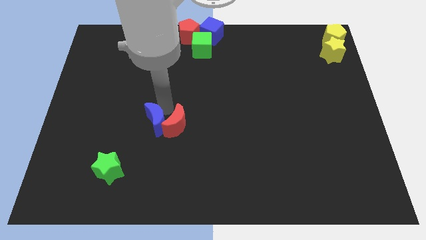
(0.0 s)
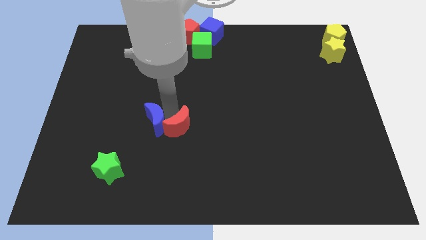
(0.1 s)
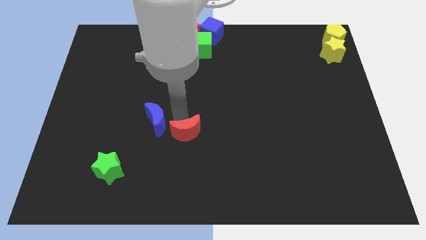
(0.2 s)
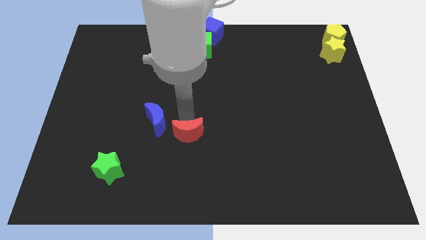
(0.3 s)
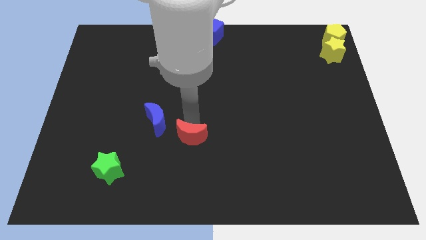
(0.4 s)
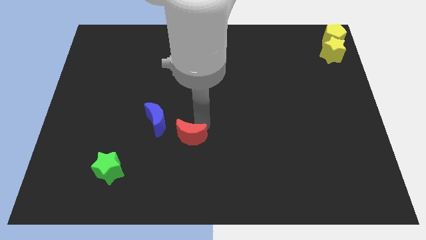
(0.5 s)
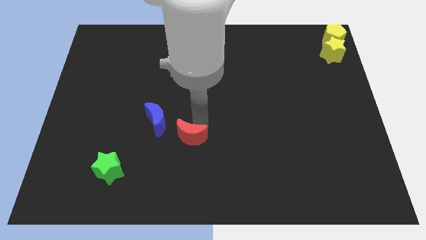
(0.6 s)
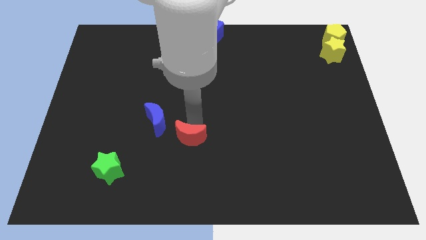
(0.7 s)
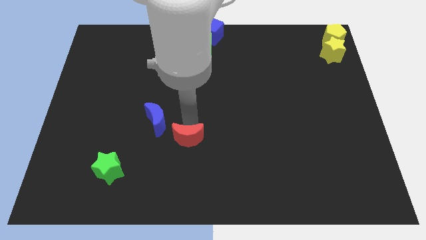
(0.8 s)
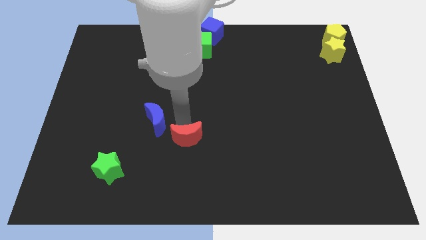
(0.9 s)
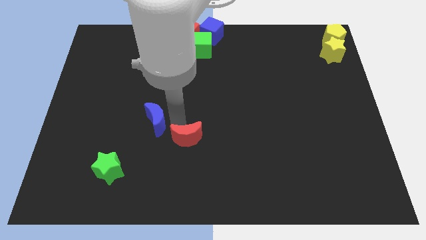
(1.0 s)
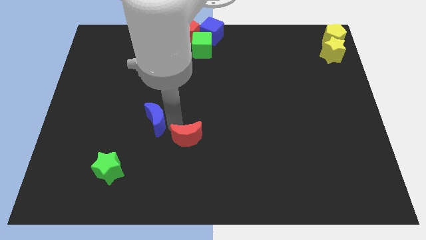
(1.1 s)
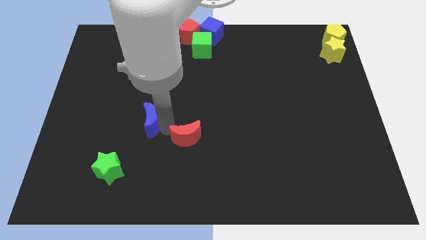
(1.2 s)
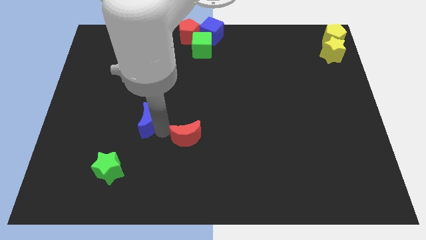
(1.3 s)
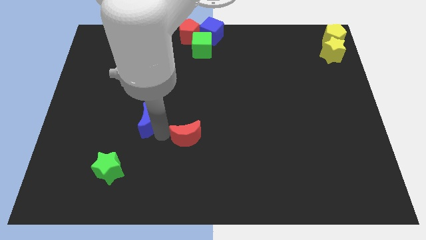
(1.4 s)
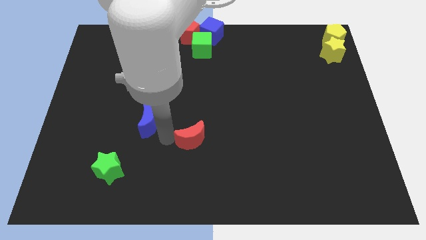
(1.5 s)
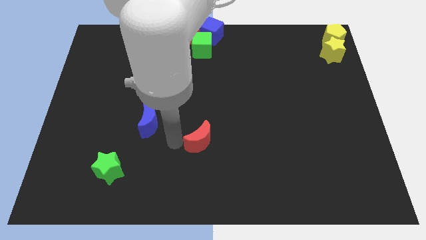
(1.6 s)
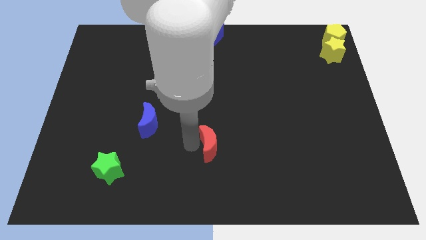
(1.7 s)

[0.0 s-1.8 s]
separate red moon from blue crescent

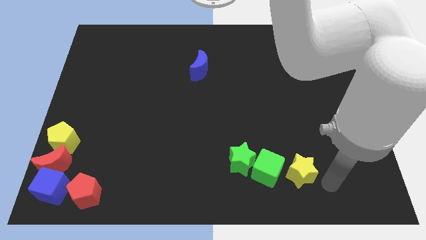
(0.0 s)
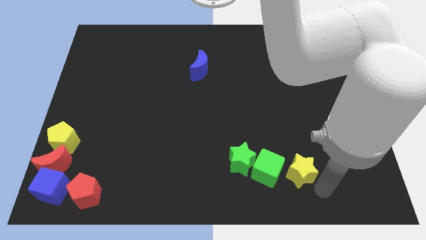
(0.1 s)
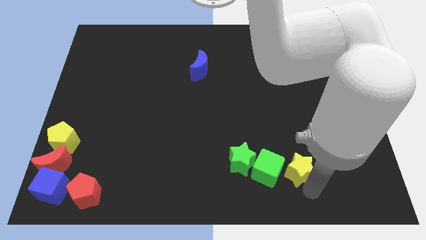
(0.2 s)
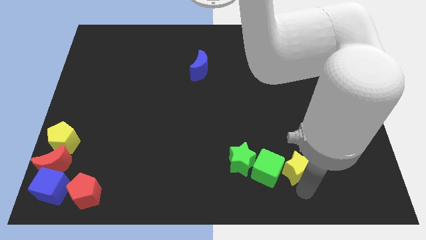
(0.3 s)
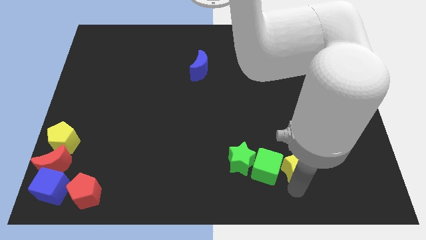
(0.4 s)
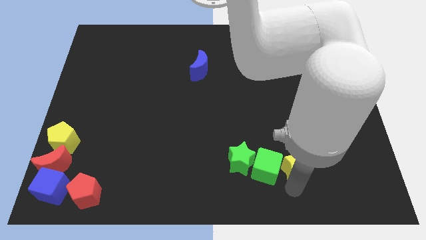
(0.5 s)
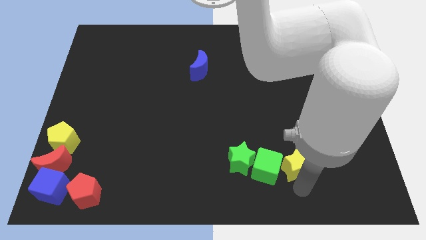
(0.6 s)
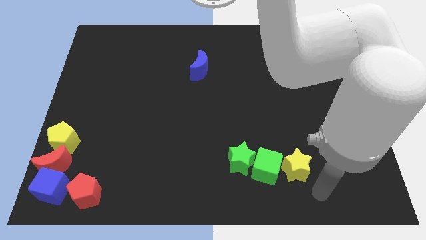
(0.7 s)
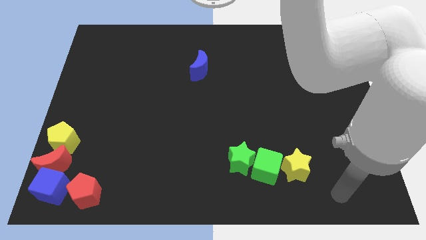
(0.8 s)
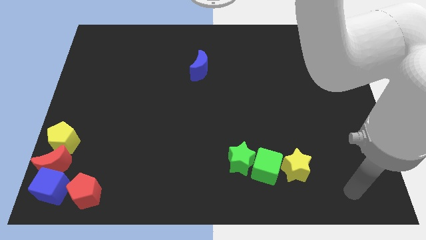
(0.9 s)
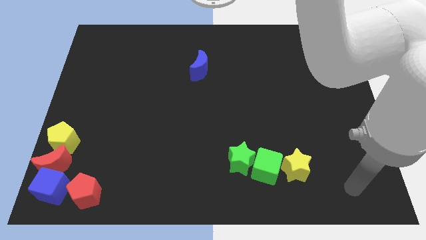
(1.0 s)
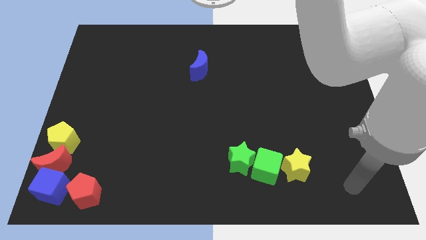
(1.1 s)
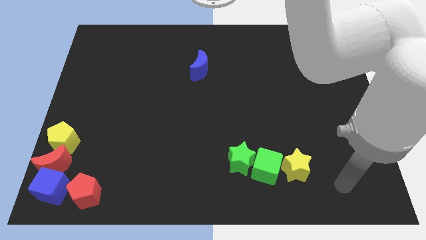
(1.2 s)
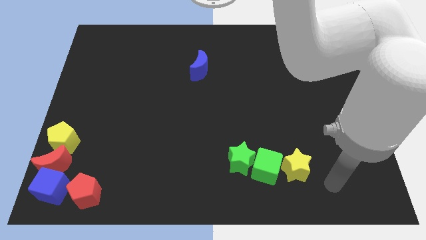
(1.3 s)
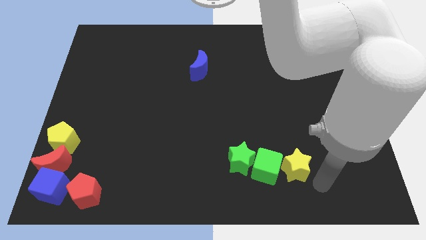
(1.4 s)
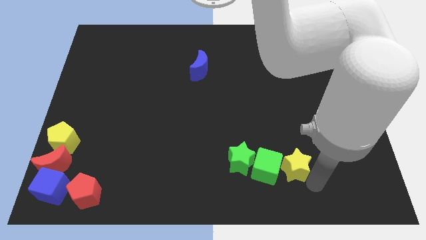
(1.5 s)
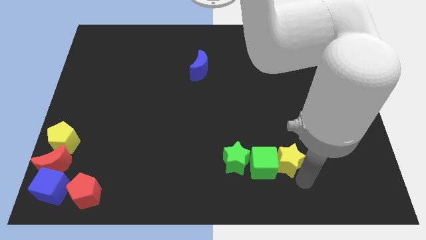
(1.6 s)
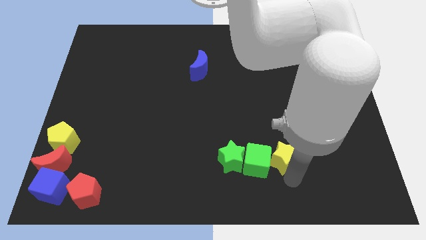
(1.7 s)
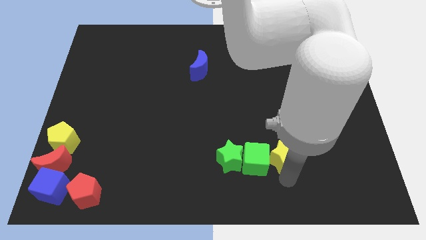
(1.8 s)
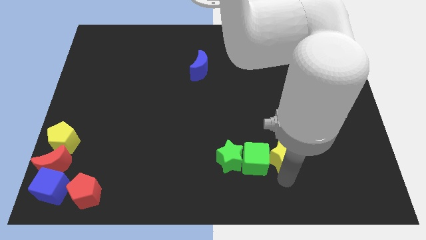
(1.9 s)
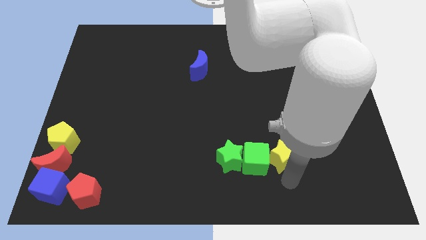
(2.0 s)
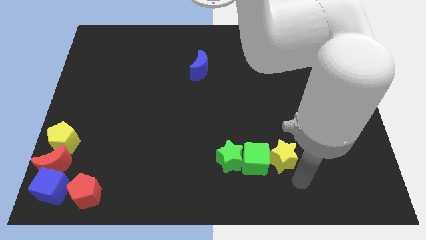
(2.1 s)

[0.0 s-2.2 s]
push yellow star into the green blocks

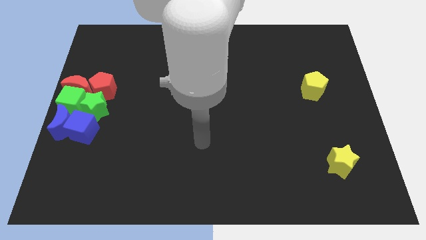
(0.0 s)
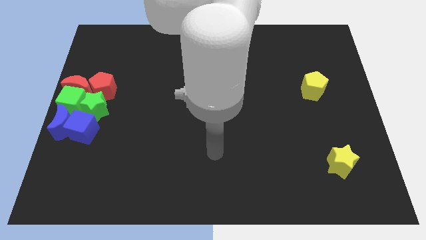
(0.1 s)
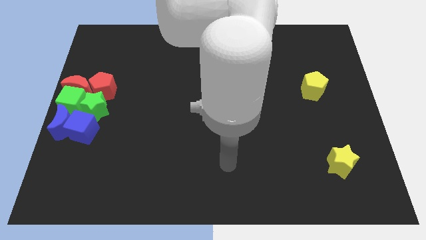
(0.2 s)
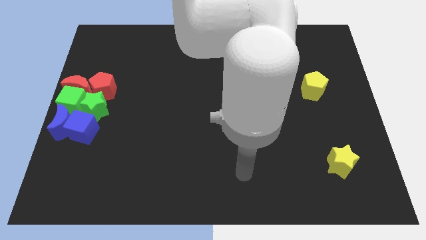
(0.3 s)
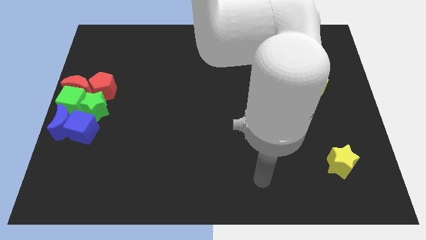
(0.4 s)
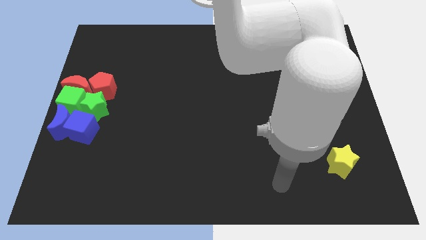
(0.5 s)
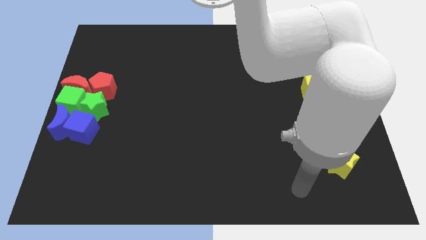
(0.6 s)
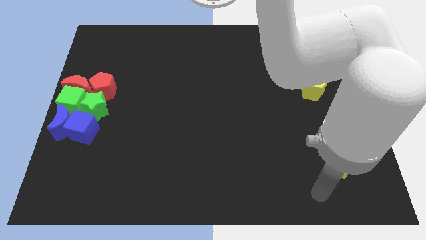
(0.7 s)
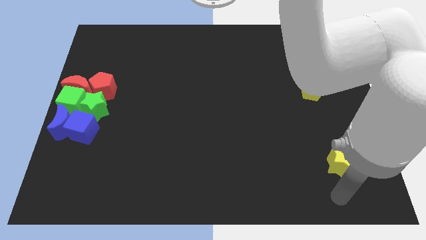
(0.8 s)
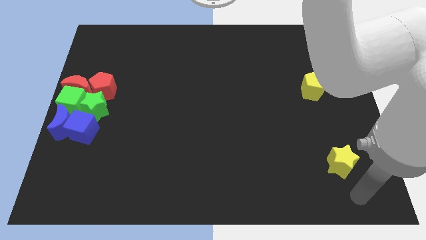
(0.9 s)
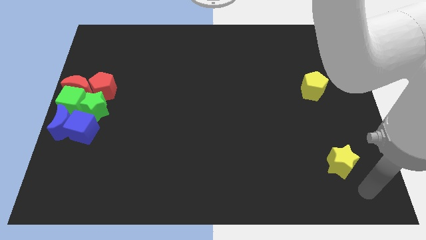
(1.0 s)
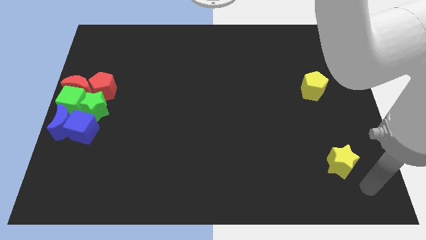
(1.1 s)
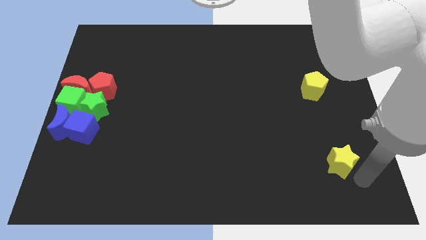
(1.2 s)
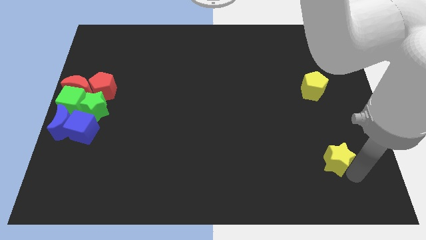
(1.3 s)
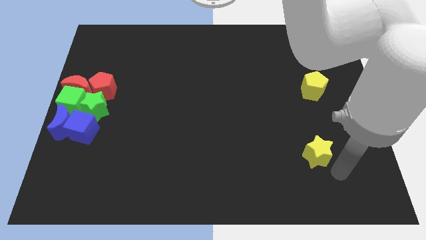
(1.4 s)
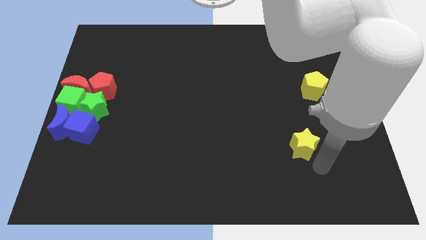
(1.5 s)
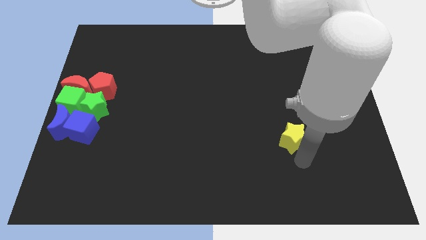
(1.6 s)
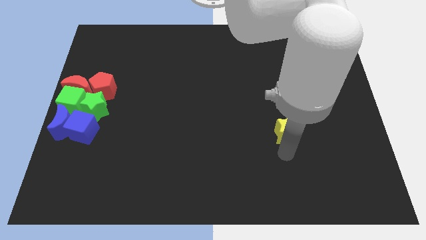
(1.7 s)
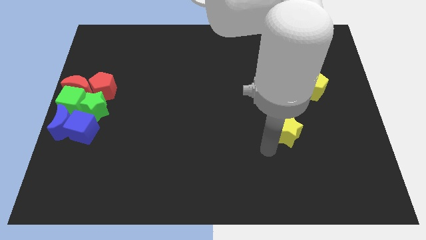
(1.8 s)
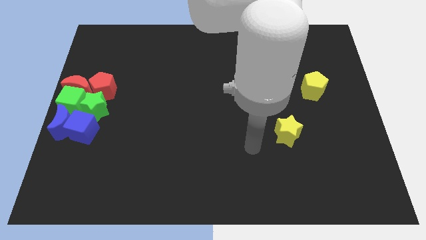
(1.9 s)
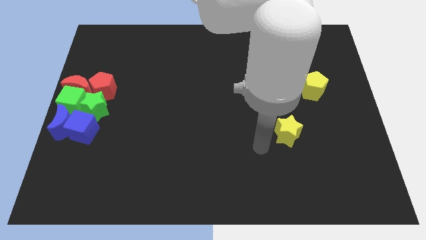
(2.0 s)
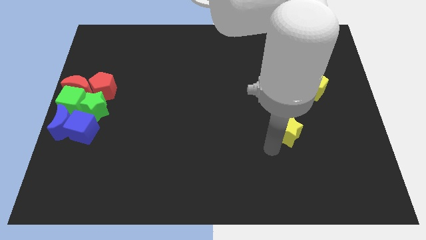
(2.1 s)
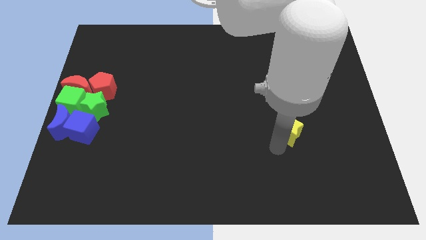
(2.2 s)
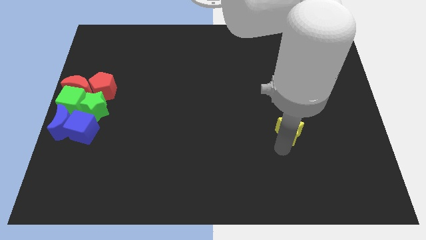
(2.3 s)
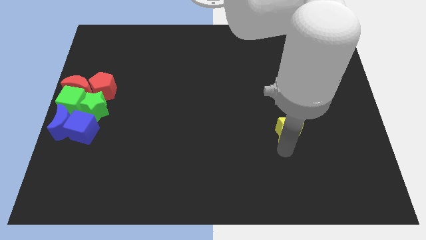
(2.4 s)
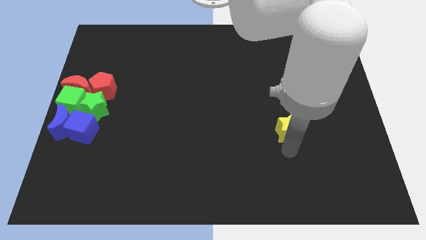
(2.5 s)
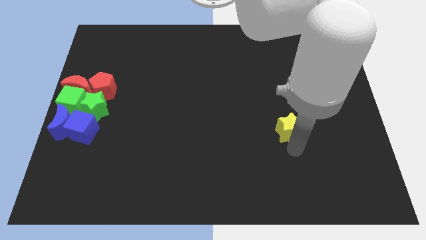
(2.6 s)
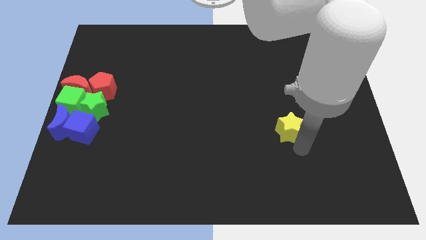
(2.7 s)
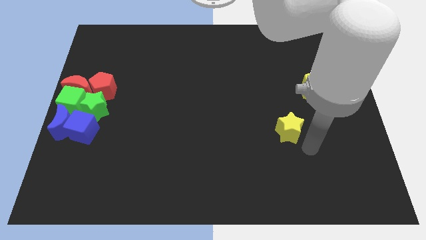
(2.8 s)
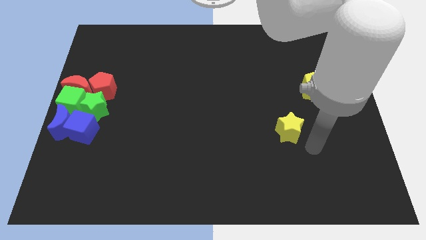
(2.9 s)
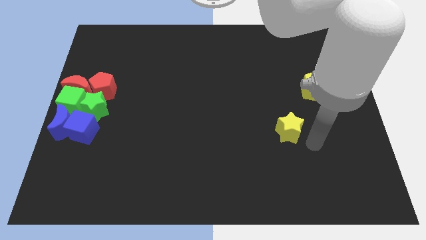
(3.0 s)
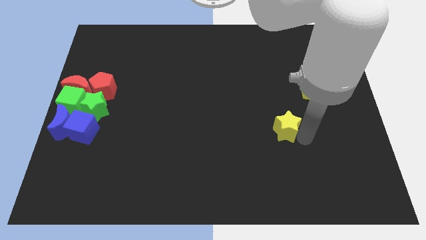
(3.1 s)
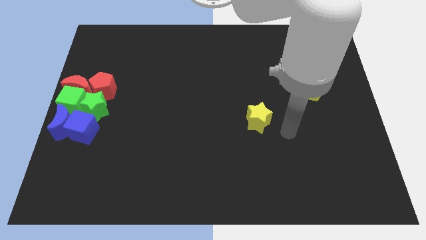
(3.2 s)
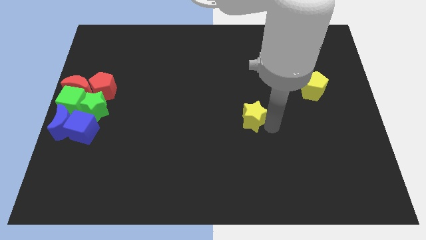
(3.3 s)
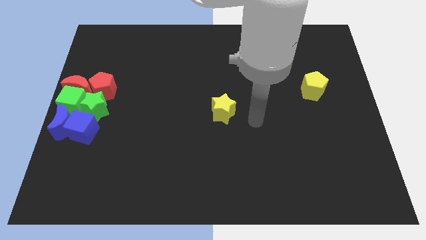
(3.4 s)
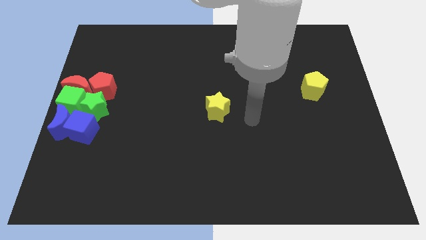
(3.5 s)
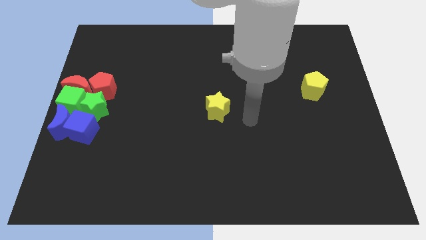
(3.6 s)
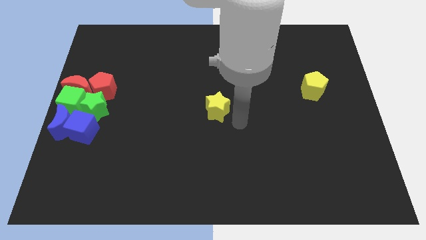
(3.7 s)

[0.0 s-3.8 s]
move the yellow star to the center of the board

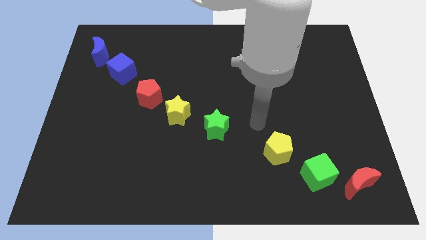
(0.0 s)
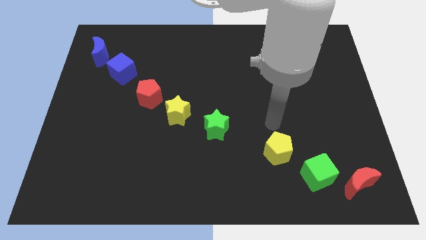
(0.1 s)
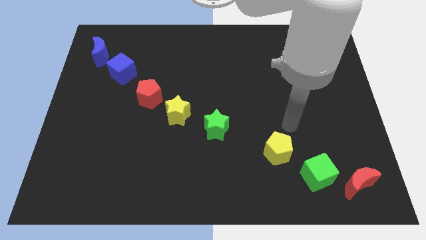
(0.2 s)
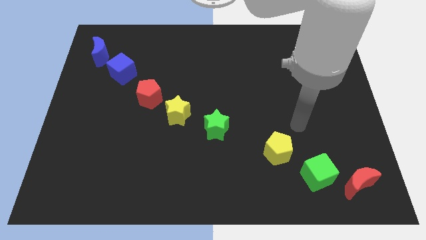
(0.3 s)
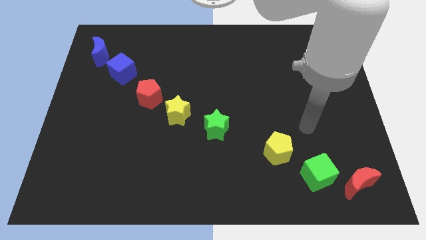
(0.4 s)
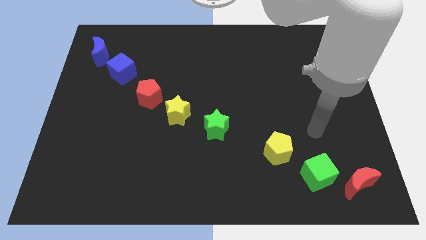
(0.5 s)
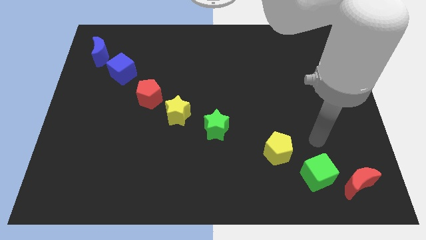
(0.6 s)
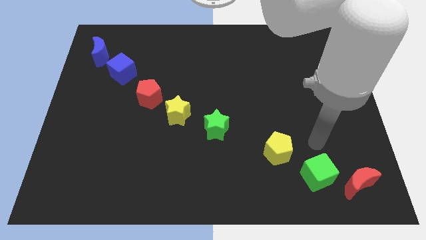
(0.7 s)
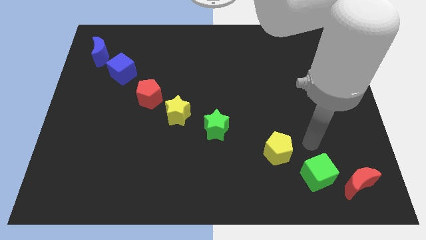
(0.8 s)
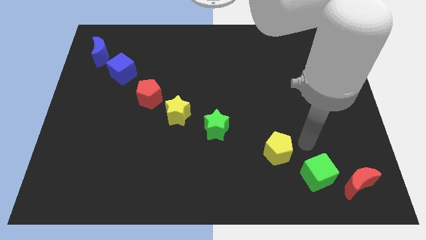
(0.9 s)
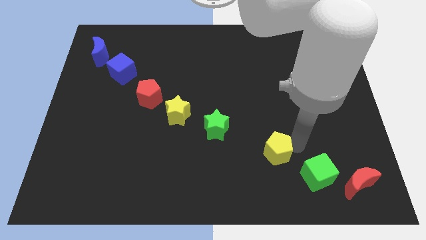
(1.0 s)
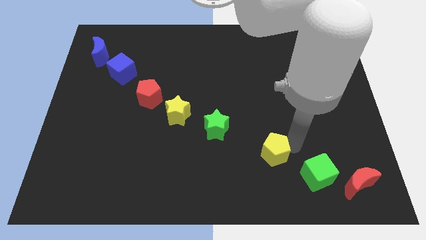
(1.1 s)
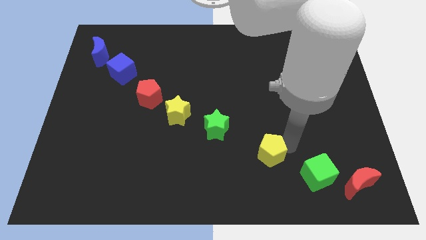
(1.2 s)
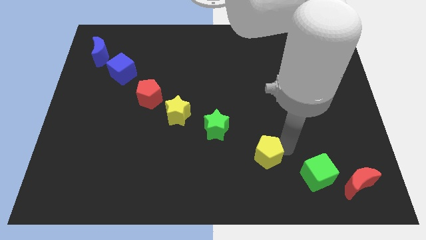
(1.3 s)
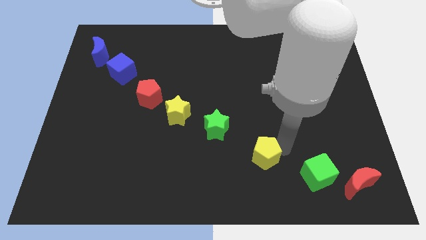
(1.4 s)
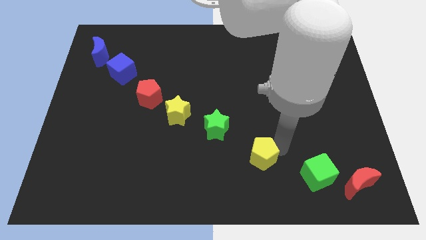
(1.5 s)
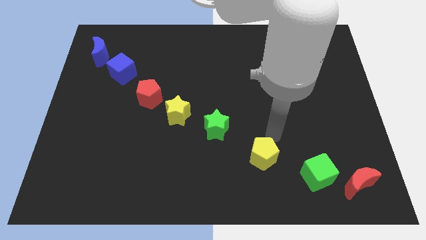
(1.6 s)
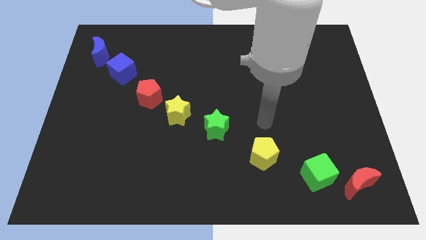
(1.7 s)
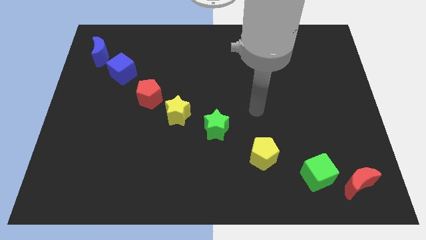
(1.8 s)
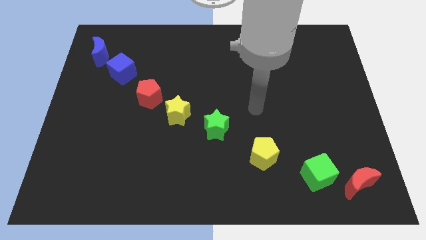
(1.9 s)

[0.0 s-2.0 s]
place the yellow pentagon parallel to the green star
